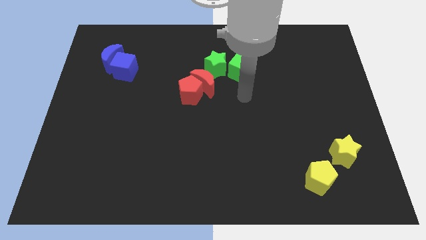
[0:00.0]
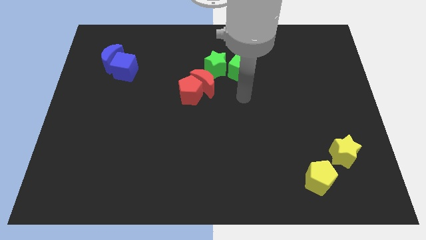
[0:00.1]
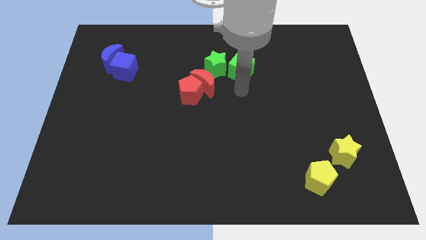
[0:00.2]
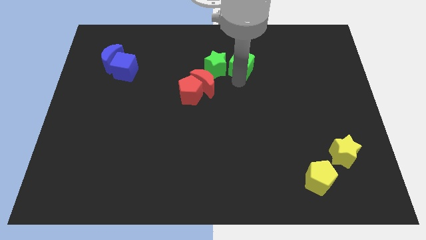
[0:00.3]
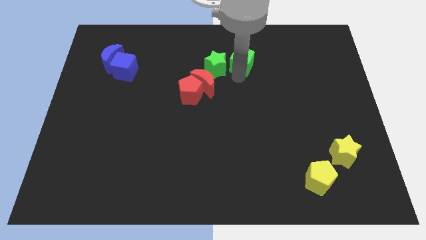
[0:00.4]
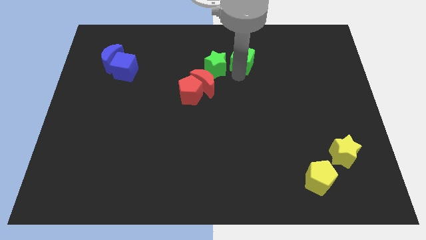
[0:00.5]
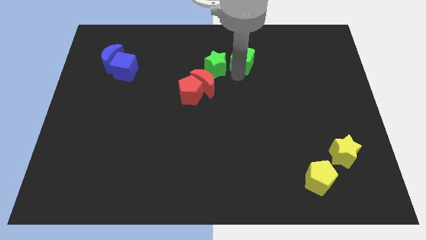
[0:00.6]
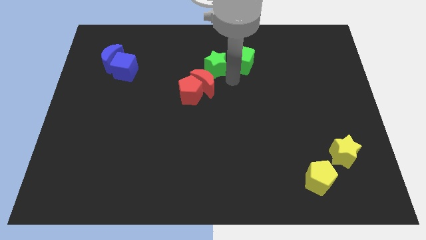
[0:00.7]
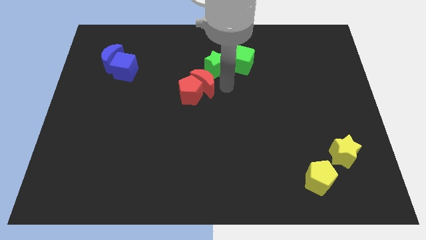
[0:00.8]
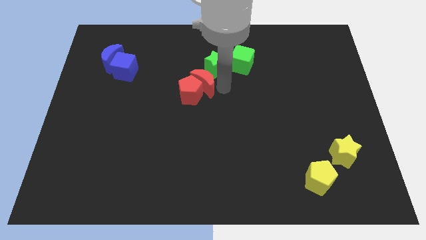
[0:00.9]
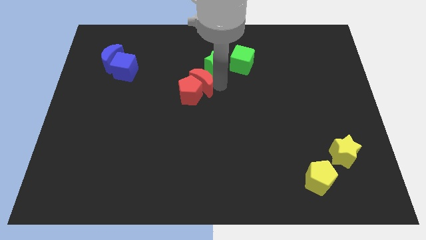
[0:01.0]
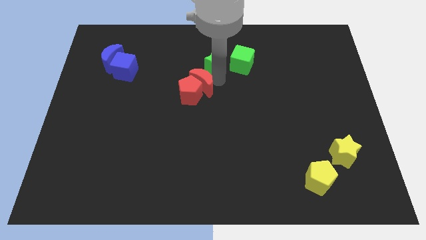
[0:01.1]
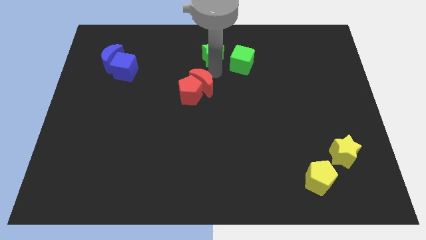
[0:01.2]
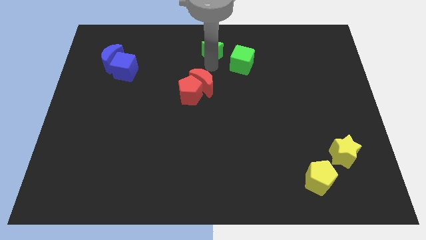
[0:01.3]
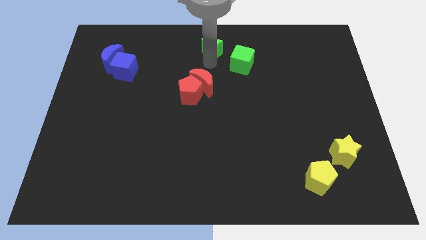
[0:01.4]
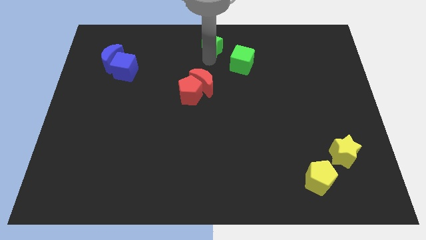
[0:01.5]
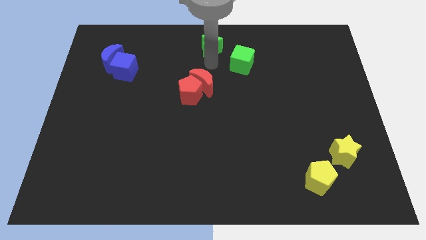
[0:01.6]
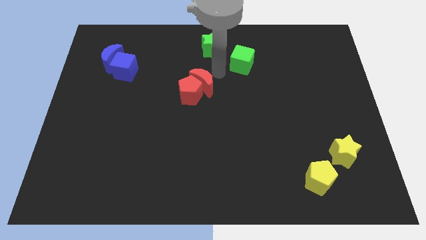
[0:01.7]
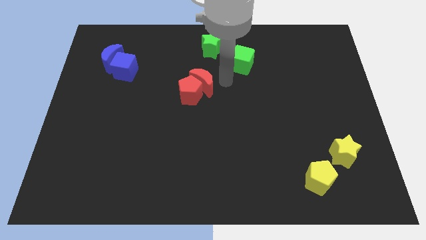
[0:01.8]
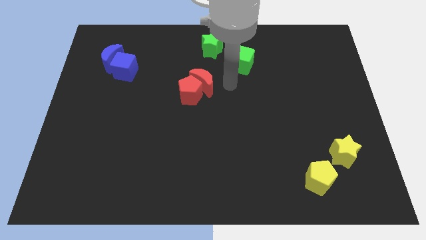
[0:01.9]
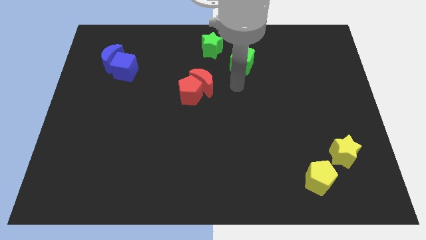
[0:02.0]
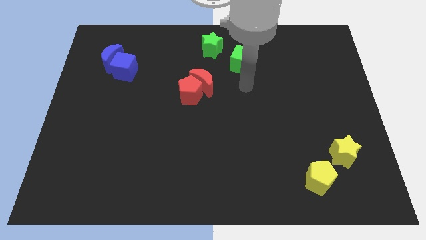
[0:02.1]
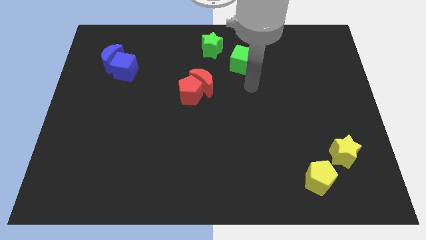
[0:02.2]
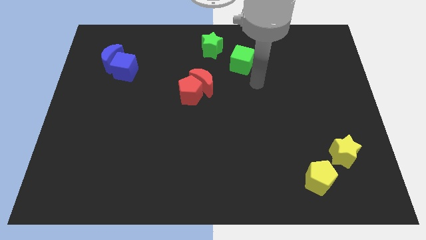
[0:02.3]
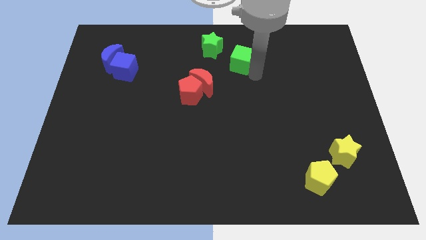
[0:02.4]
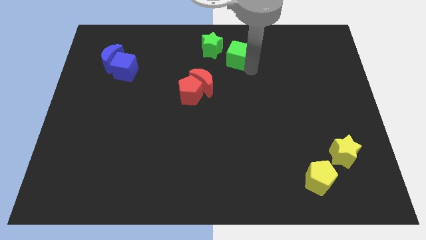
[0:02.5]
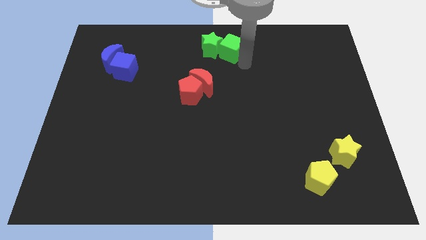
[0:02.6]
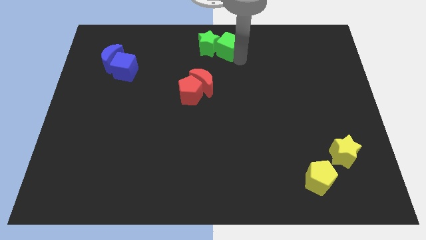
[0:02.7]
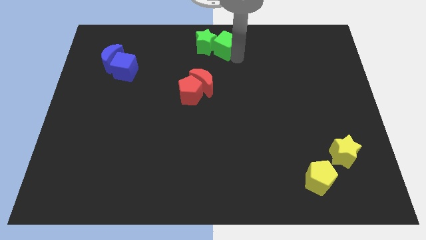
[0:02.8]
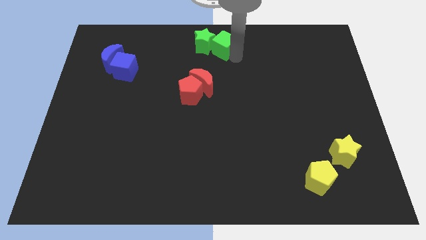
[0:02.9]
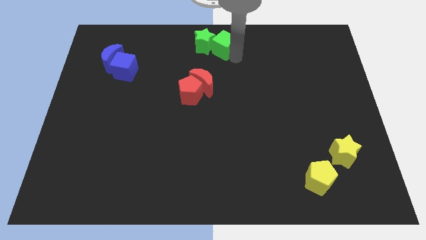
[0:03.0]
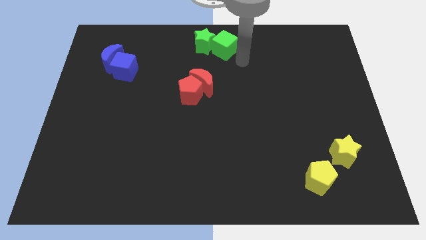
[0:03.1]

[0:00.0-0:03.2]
move the green blocks to the top center of the board

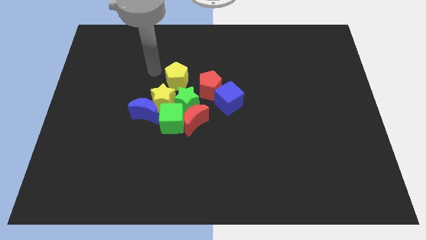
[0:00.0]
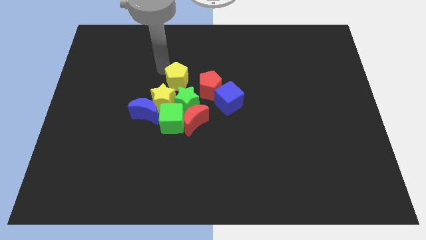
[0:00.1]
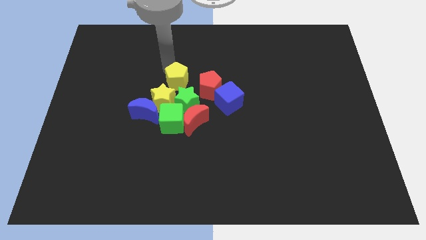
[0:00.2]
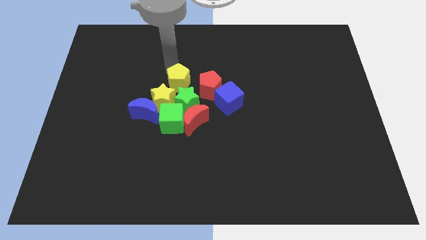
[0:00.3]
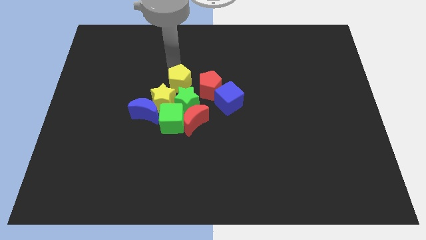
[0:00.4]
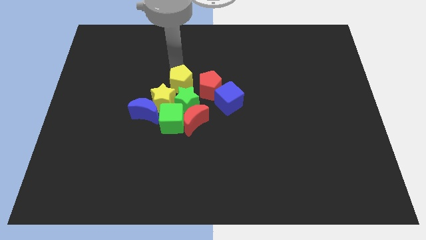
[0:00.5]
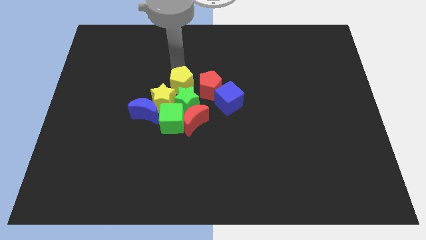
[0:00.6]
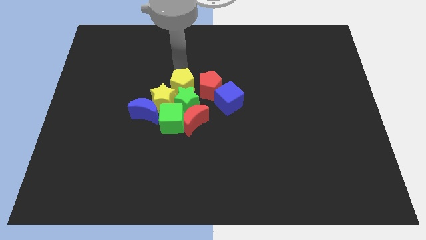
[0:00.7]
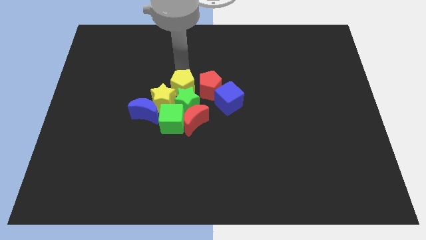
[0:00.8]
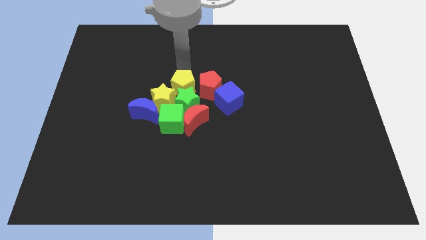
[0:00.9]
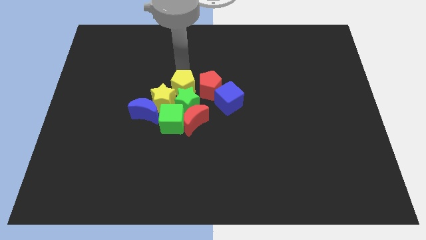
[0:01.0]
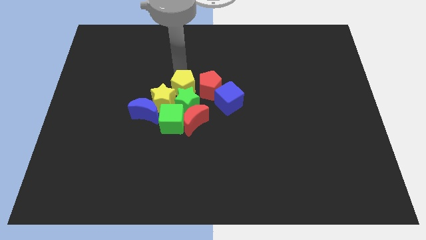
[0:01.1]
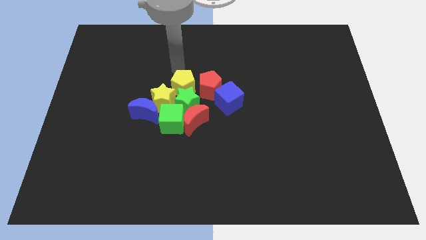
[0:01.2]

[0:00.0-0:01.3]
push the yellow pentagon into the green star

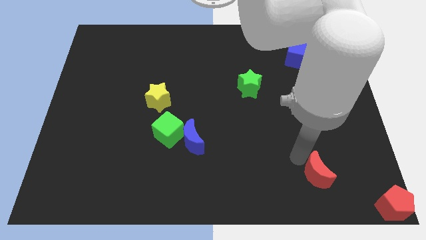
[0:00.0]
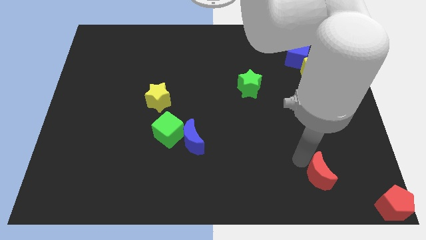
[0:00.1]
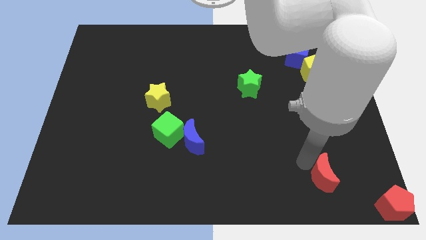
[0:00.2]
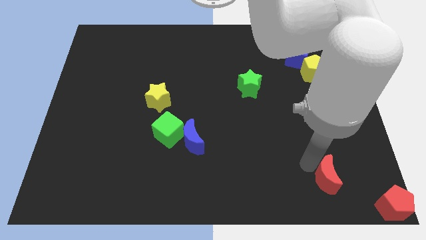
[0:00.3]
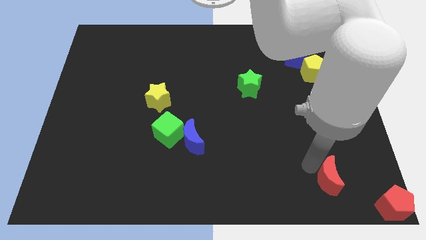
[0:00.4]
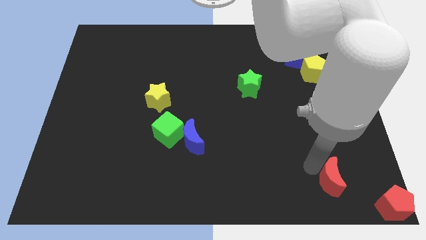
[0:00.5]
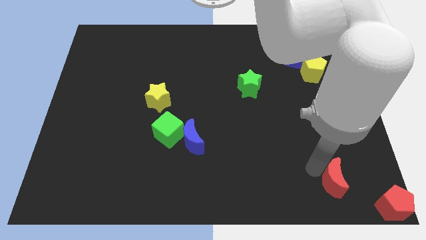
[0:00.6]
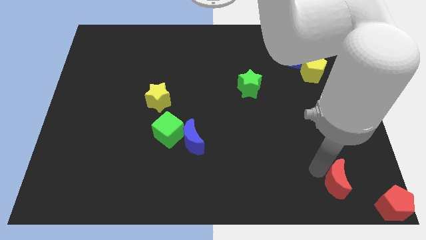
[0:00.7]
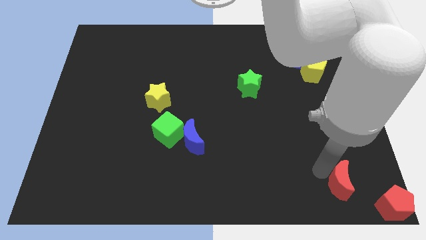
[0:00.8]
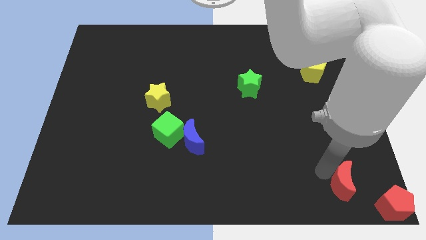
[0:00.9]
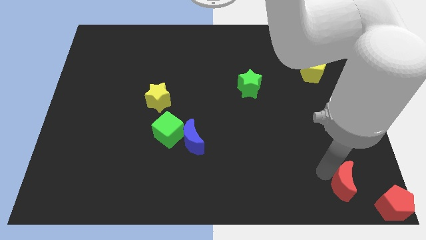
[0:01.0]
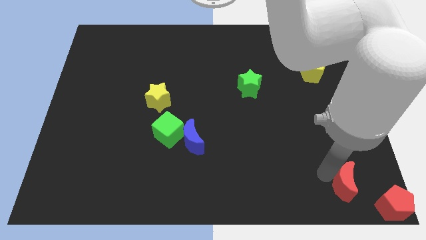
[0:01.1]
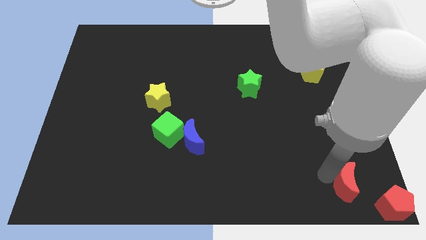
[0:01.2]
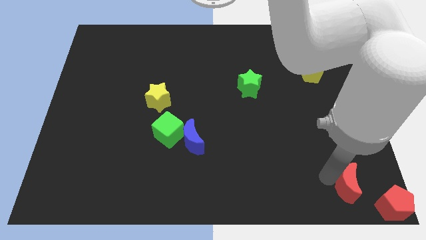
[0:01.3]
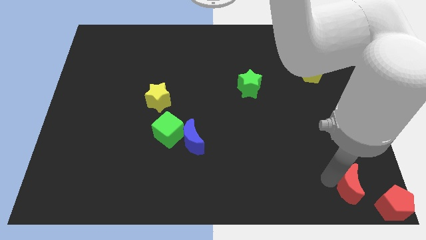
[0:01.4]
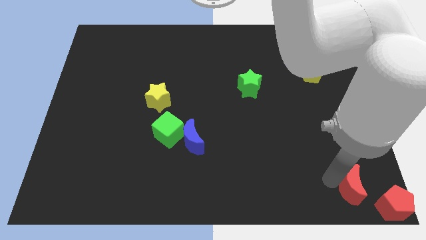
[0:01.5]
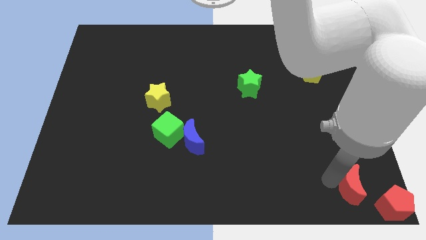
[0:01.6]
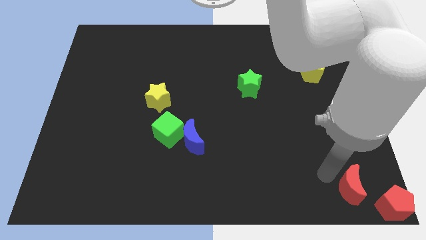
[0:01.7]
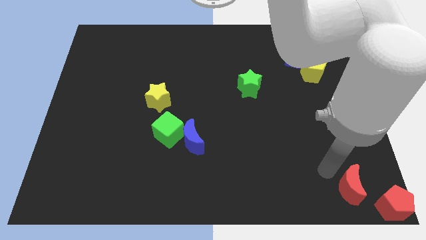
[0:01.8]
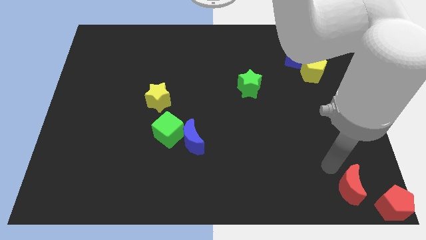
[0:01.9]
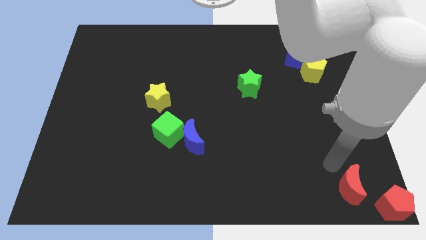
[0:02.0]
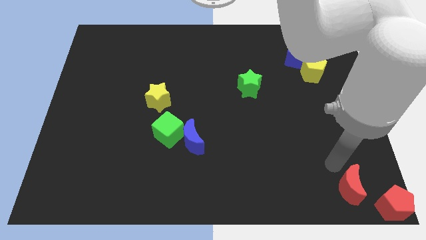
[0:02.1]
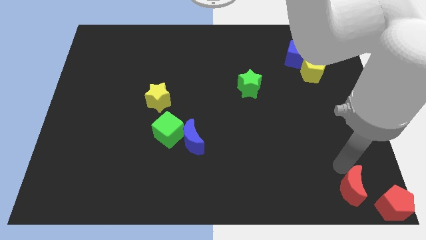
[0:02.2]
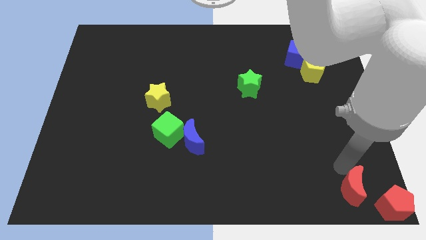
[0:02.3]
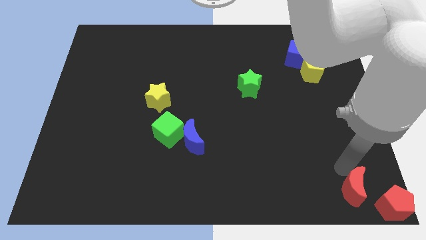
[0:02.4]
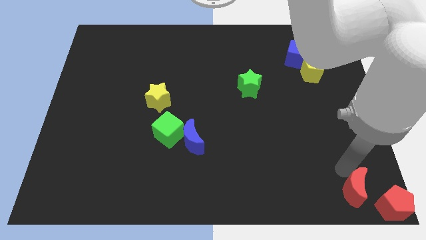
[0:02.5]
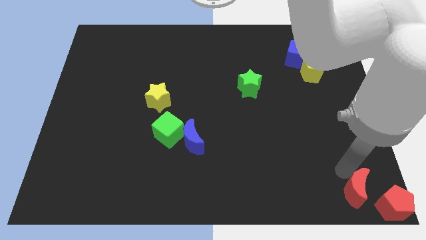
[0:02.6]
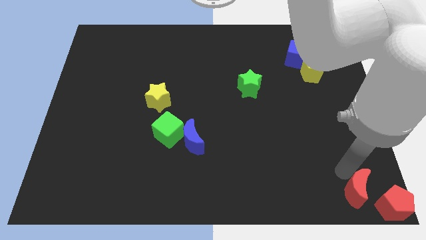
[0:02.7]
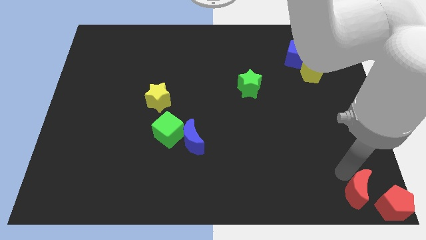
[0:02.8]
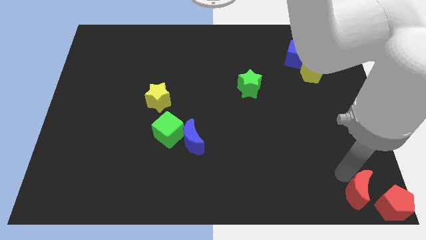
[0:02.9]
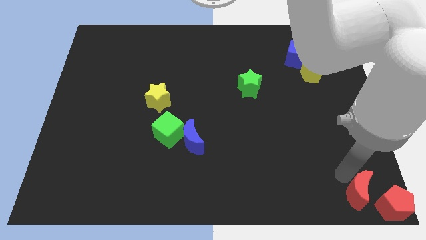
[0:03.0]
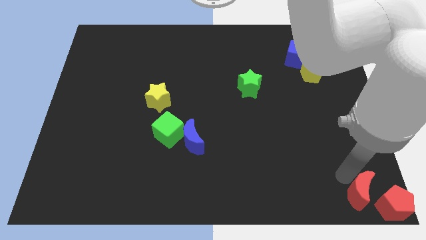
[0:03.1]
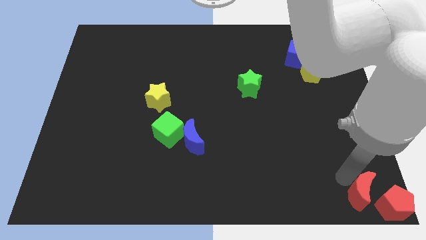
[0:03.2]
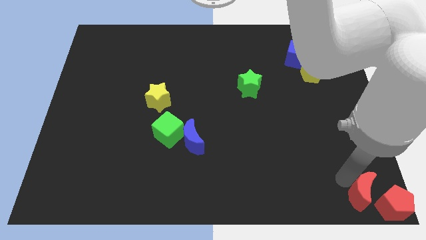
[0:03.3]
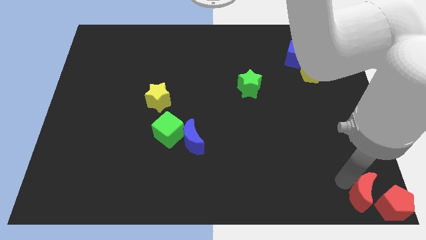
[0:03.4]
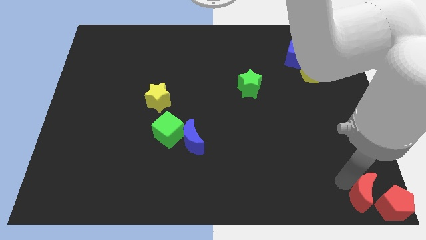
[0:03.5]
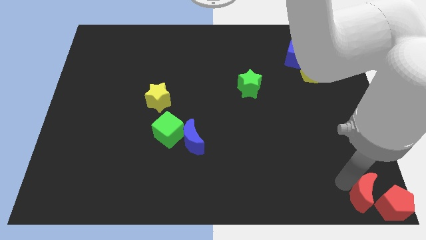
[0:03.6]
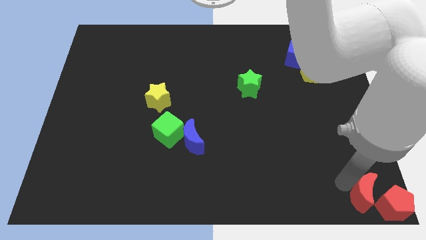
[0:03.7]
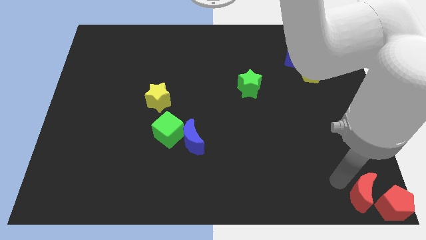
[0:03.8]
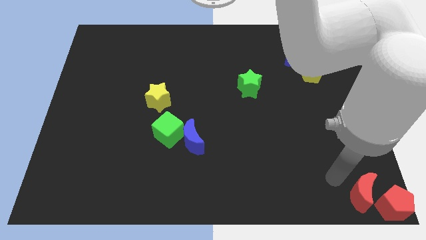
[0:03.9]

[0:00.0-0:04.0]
place the red crescent to the left side of red pentagon

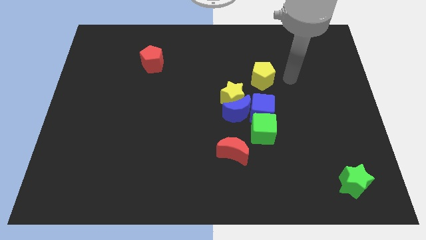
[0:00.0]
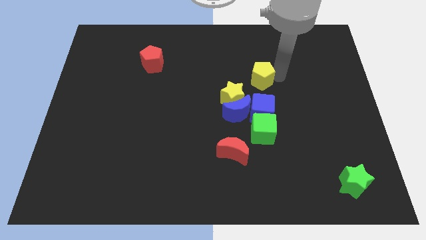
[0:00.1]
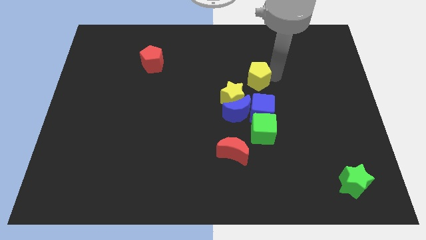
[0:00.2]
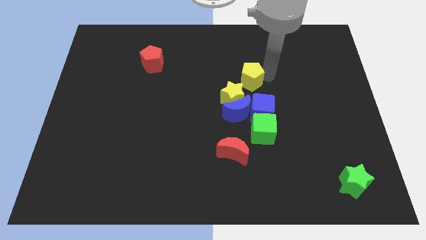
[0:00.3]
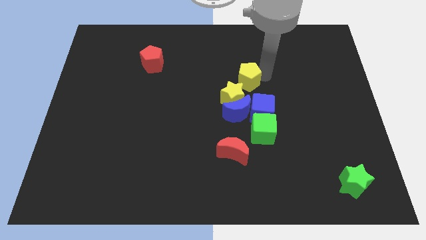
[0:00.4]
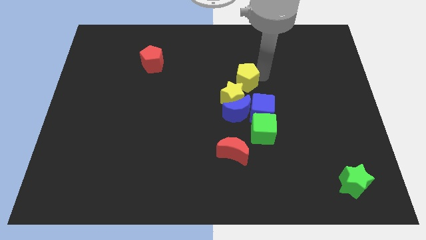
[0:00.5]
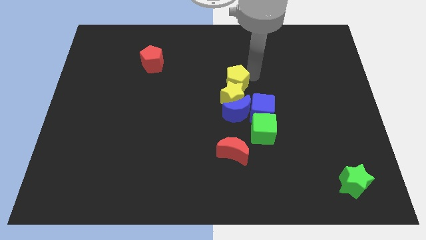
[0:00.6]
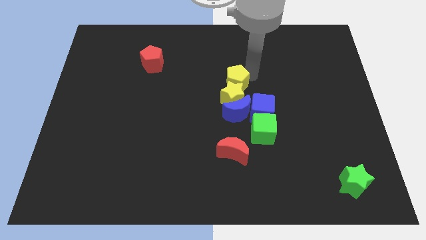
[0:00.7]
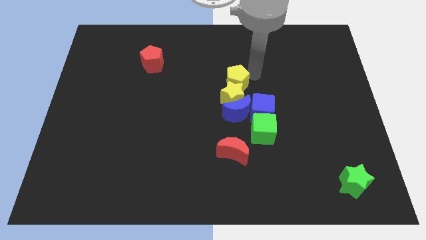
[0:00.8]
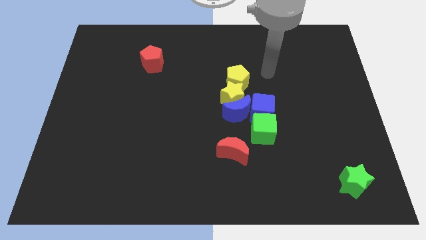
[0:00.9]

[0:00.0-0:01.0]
place yellow pentagon above yellow star
